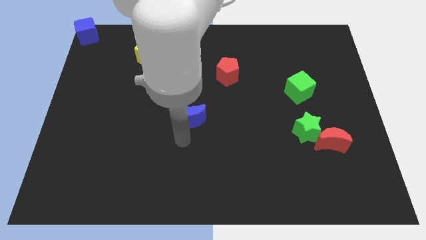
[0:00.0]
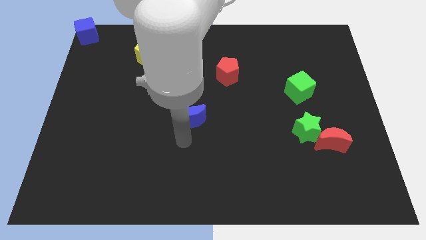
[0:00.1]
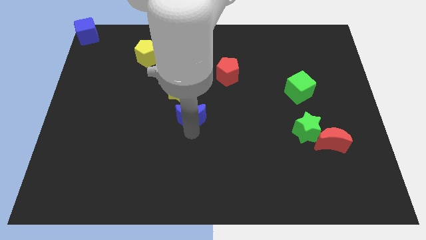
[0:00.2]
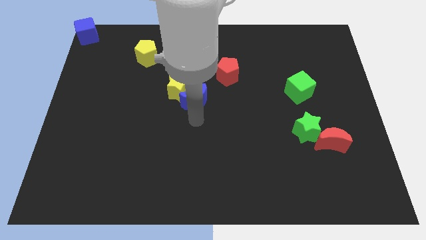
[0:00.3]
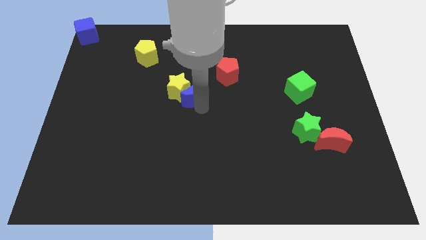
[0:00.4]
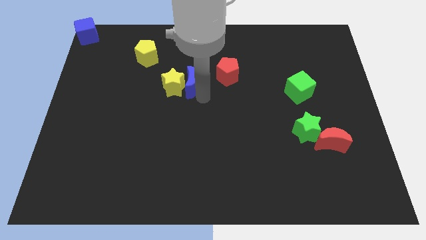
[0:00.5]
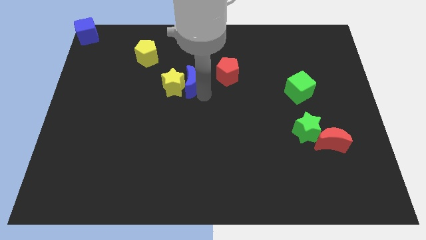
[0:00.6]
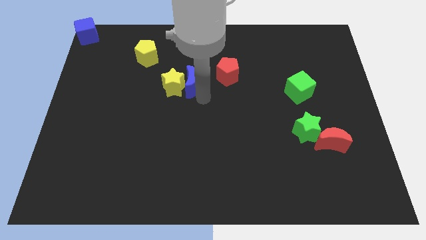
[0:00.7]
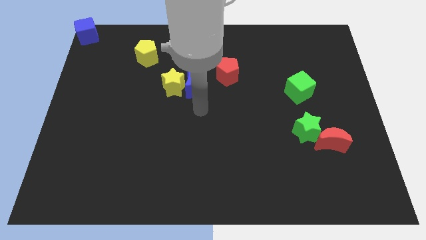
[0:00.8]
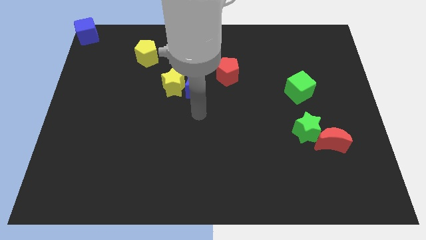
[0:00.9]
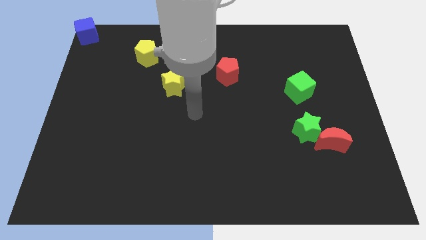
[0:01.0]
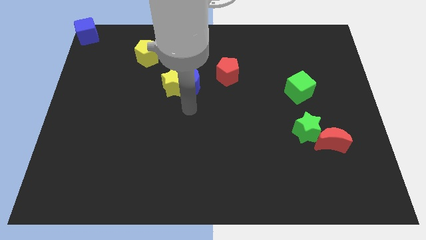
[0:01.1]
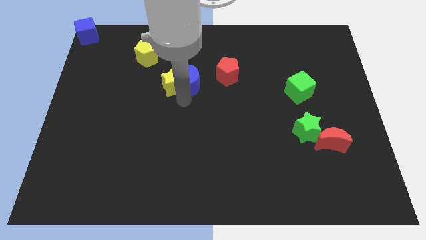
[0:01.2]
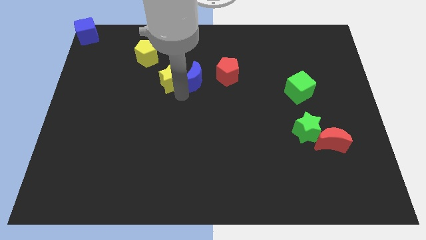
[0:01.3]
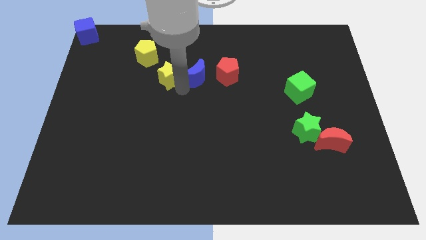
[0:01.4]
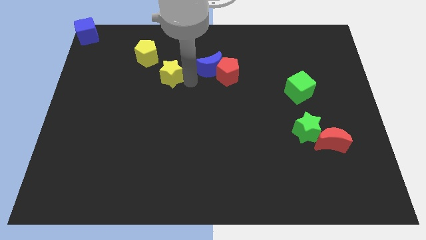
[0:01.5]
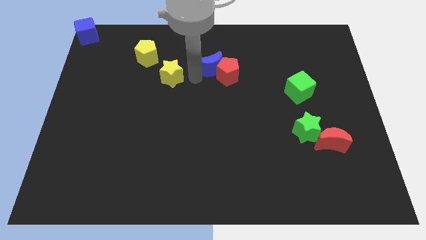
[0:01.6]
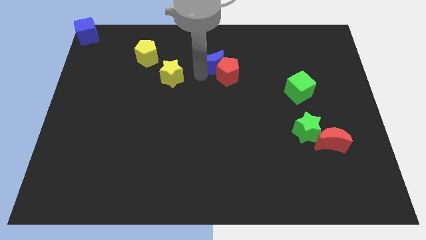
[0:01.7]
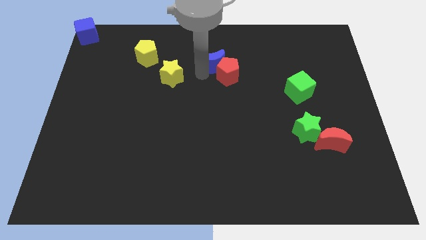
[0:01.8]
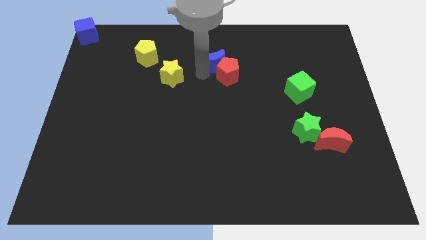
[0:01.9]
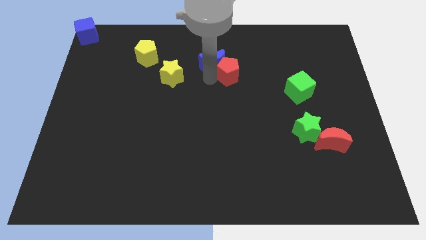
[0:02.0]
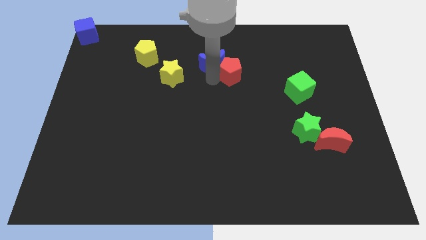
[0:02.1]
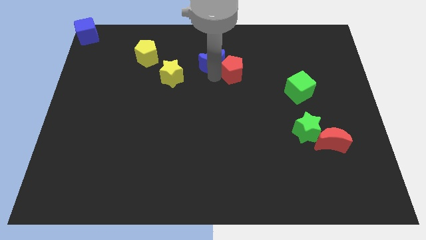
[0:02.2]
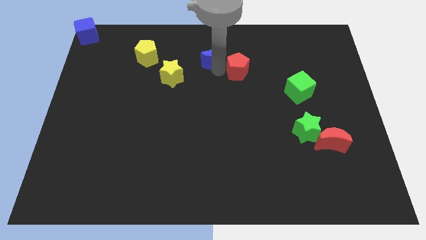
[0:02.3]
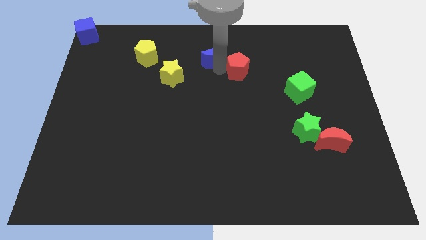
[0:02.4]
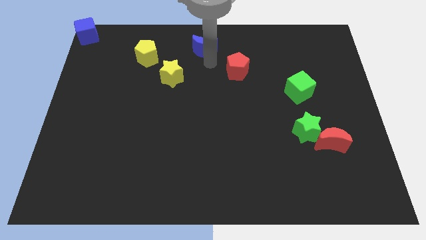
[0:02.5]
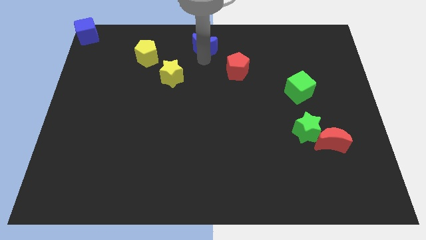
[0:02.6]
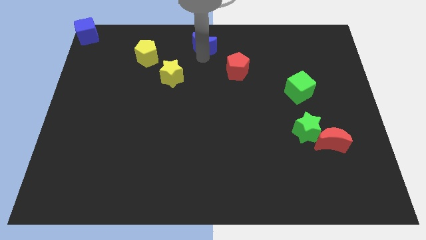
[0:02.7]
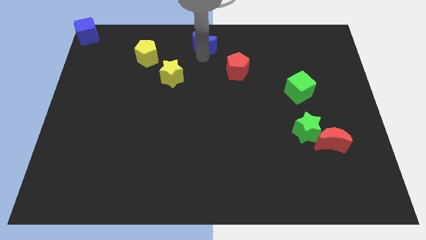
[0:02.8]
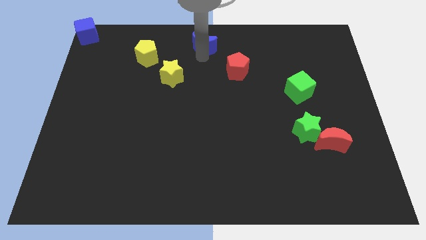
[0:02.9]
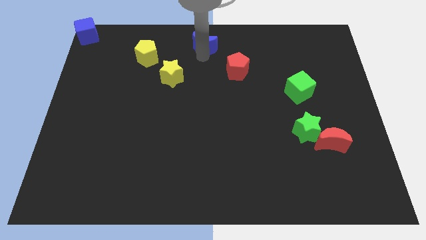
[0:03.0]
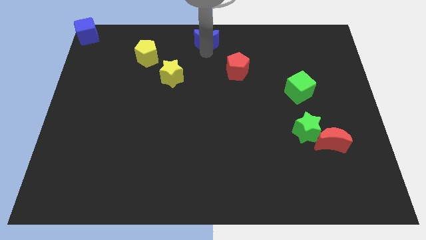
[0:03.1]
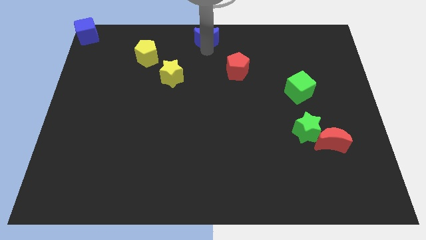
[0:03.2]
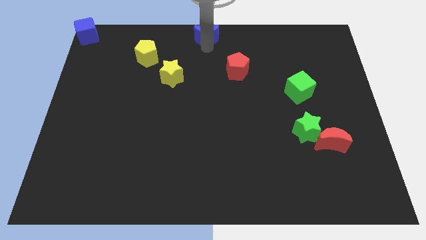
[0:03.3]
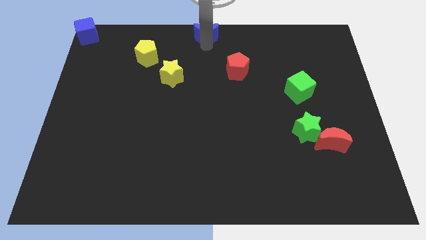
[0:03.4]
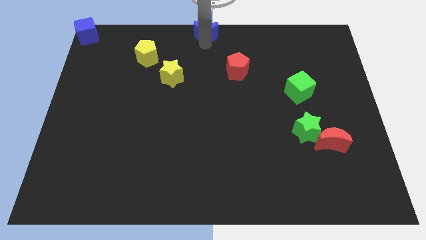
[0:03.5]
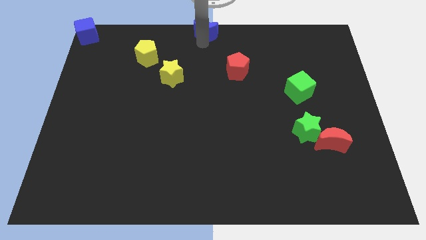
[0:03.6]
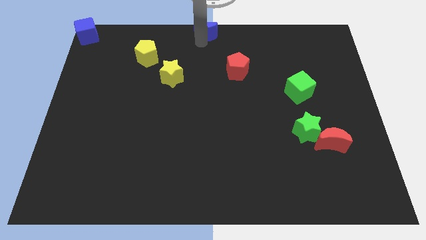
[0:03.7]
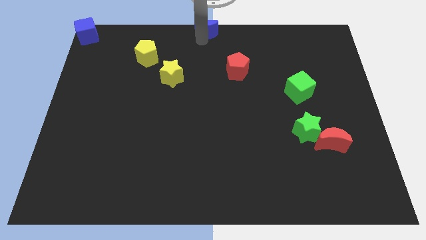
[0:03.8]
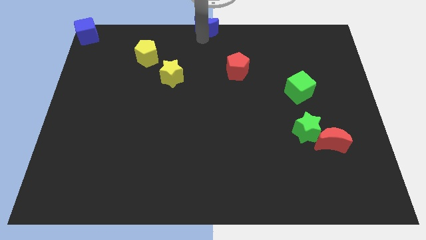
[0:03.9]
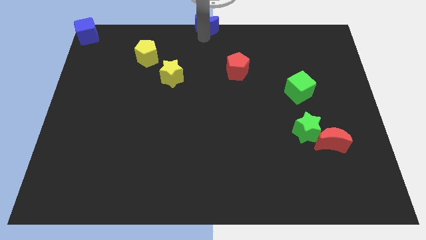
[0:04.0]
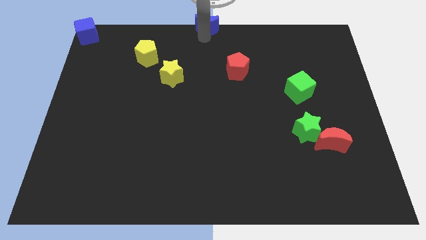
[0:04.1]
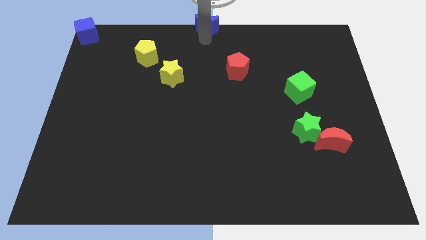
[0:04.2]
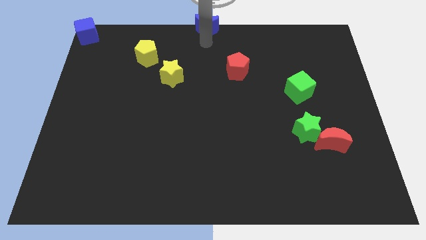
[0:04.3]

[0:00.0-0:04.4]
push the blue crescent towards the top center of the board

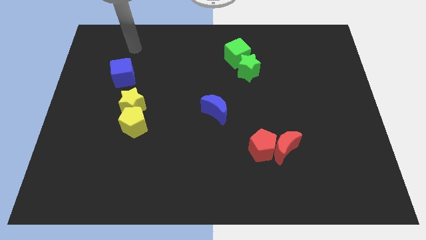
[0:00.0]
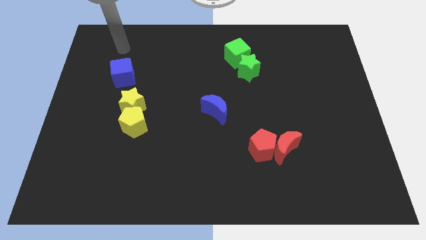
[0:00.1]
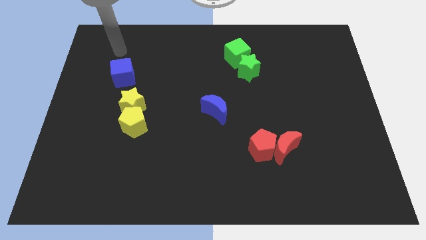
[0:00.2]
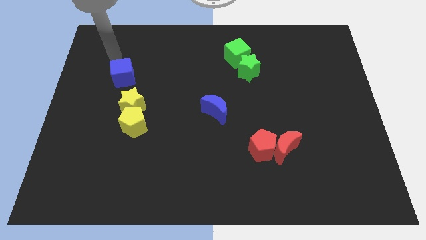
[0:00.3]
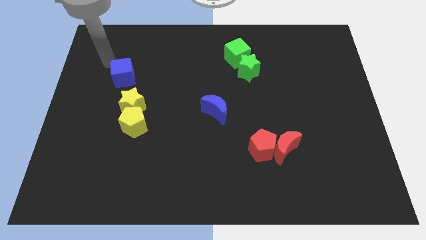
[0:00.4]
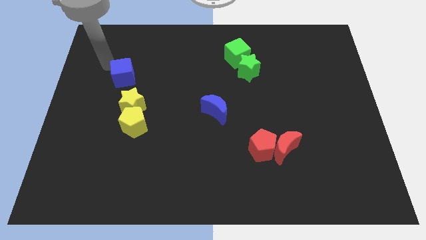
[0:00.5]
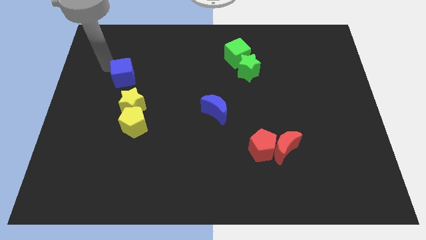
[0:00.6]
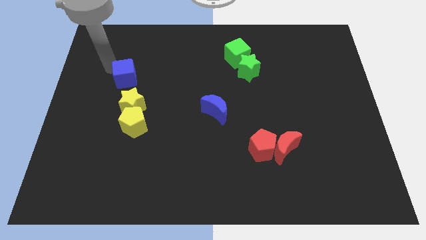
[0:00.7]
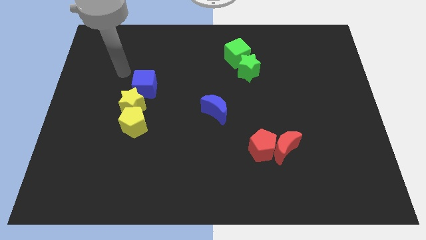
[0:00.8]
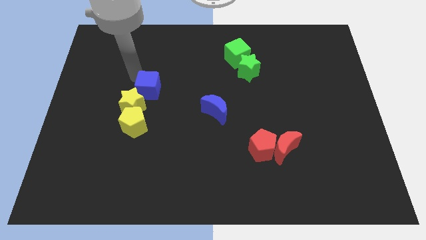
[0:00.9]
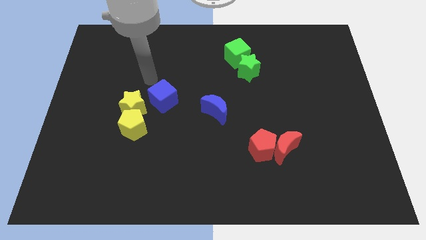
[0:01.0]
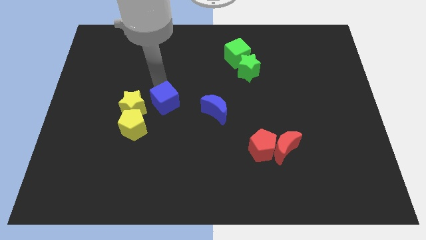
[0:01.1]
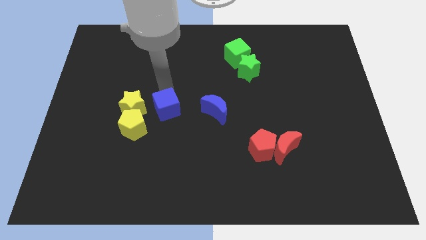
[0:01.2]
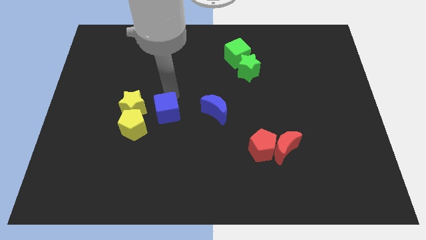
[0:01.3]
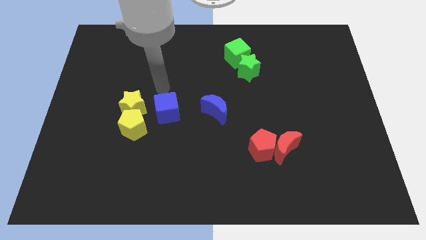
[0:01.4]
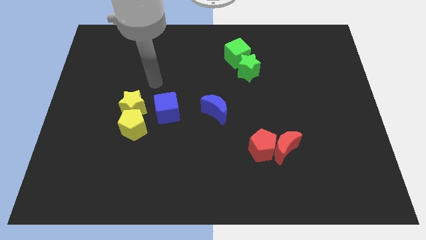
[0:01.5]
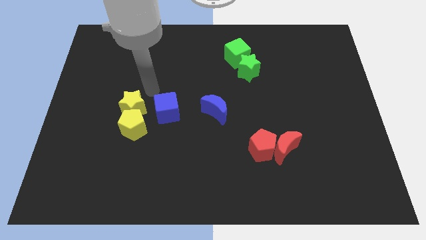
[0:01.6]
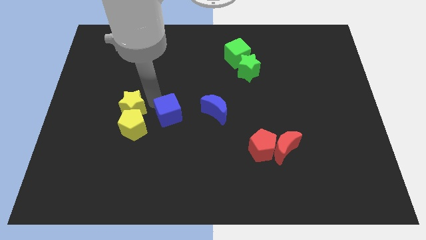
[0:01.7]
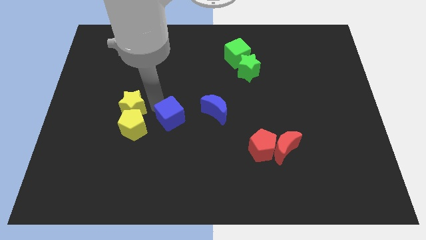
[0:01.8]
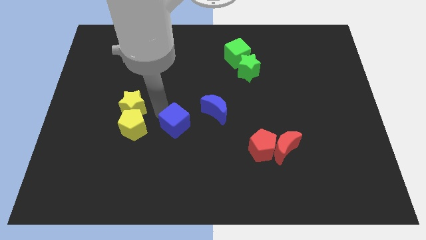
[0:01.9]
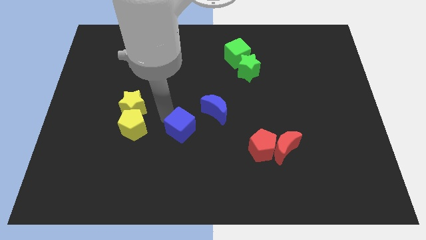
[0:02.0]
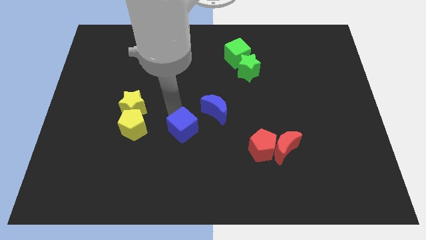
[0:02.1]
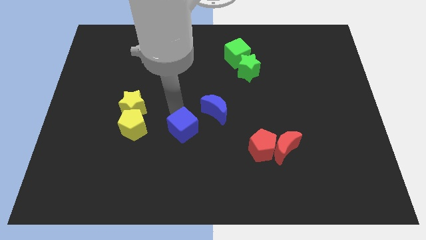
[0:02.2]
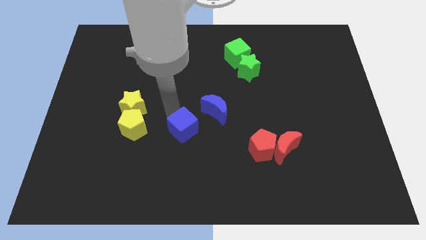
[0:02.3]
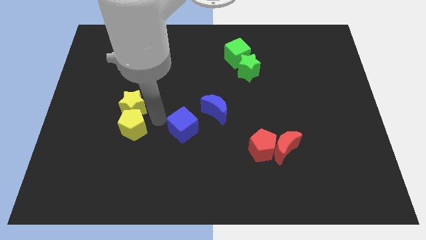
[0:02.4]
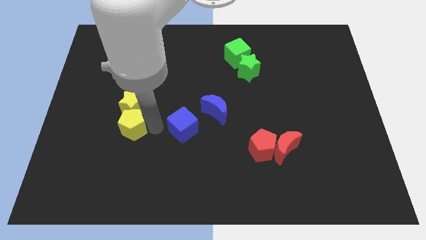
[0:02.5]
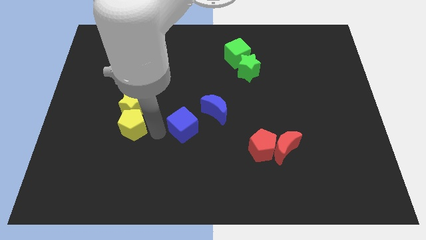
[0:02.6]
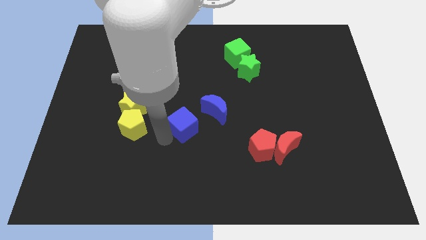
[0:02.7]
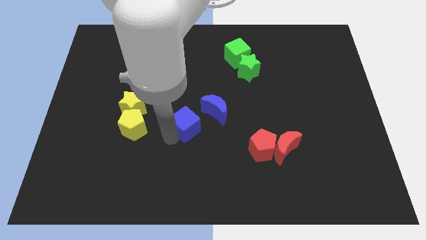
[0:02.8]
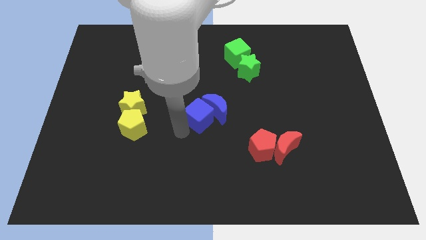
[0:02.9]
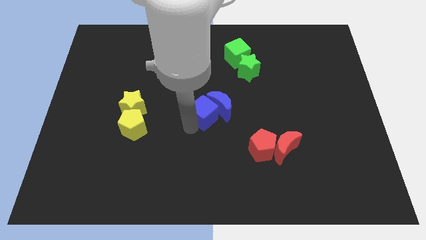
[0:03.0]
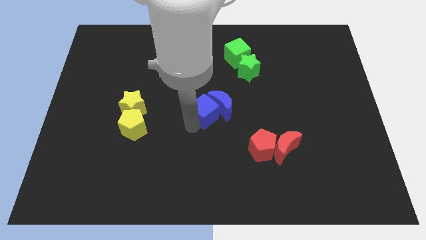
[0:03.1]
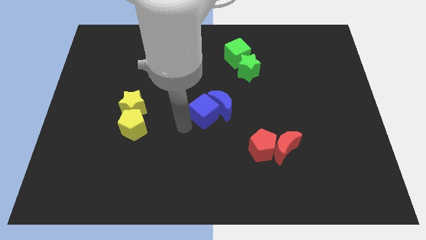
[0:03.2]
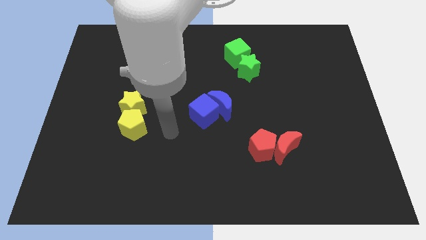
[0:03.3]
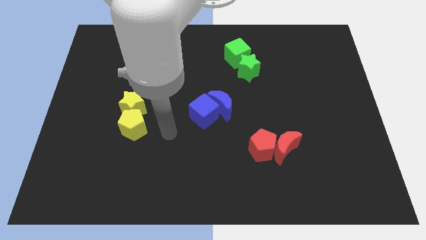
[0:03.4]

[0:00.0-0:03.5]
move the blue cube into blue moon at the center

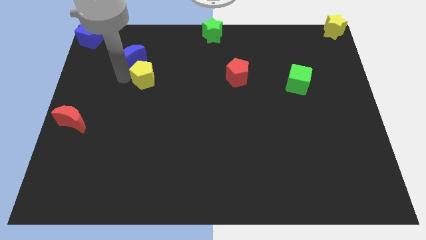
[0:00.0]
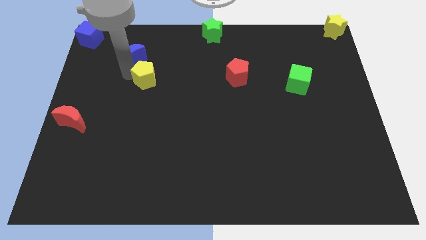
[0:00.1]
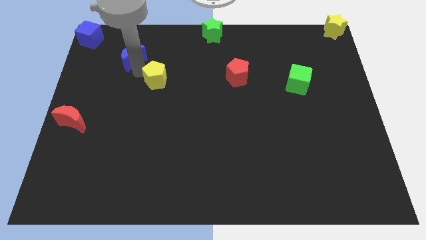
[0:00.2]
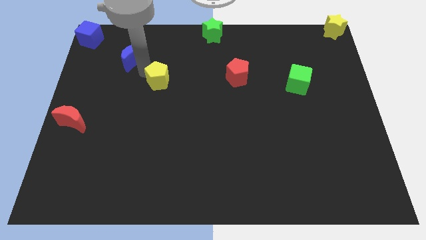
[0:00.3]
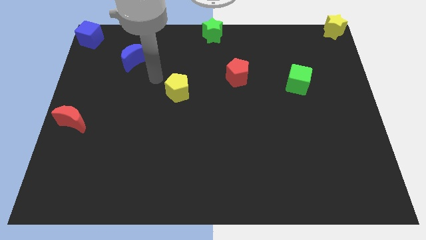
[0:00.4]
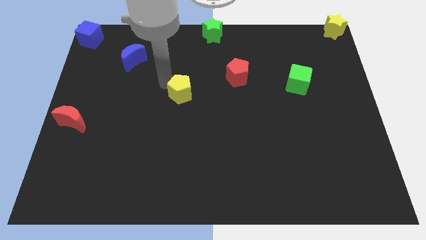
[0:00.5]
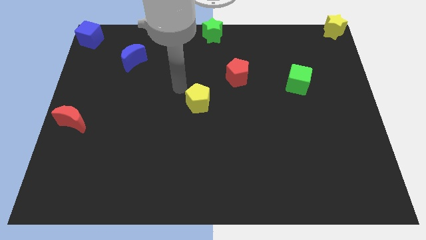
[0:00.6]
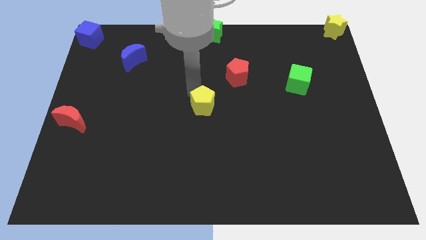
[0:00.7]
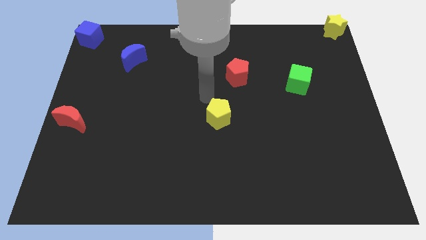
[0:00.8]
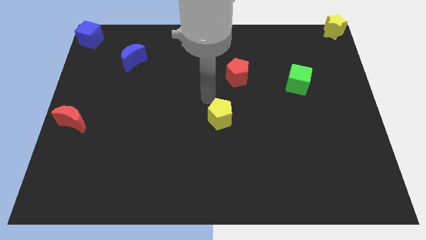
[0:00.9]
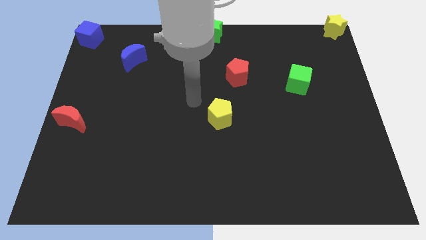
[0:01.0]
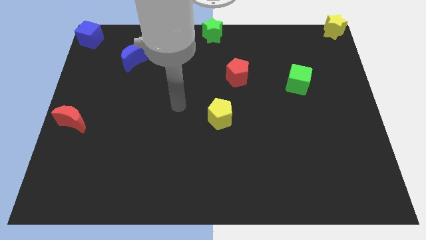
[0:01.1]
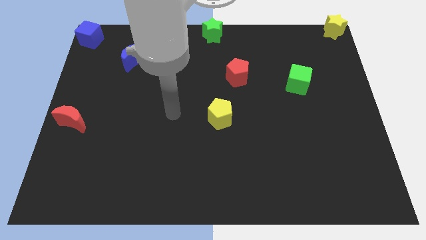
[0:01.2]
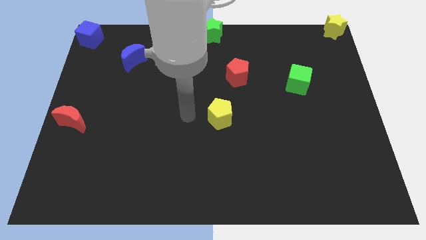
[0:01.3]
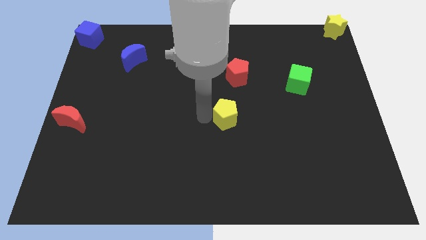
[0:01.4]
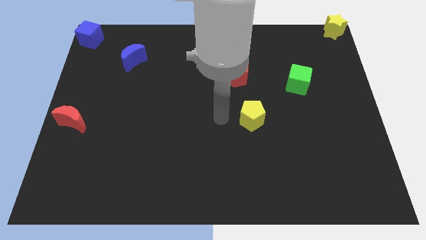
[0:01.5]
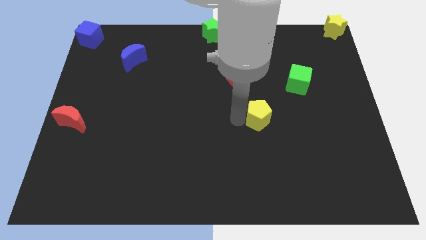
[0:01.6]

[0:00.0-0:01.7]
separate the yellow pentagon from the blue crescent
